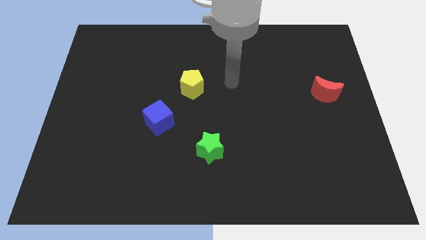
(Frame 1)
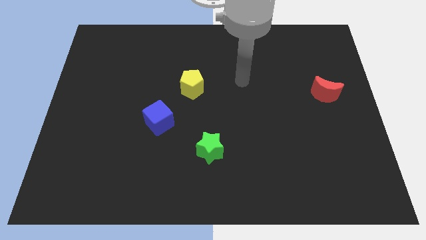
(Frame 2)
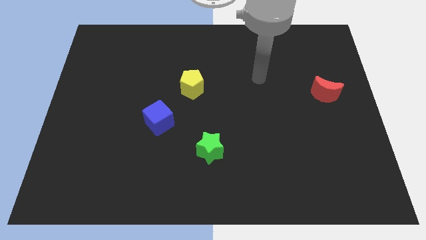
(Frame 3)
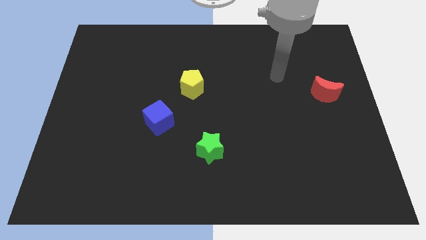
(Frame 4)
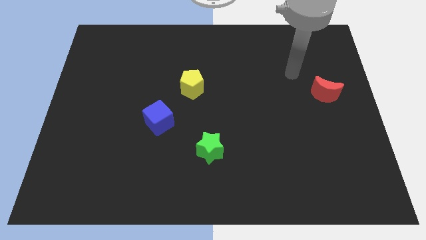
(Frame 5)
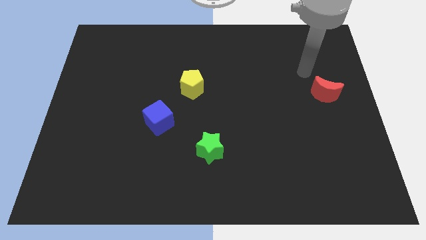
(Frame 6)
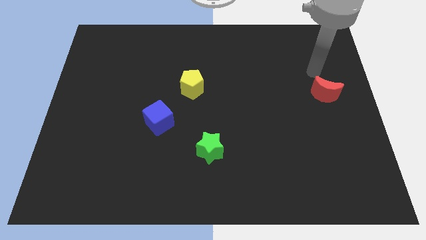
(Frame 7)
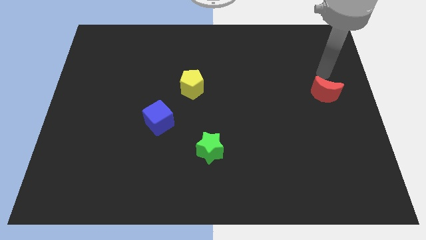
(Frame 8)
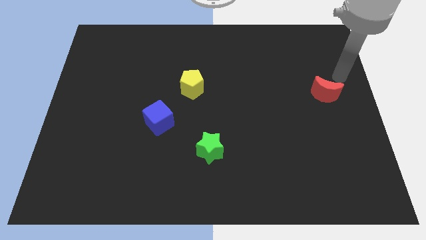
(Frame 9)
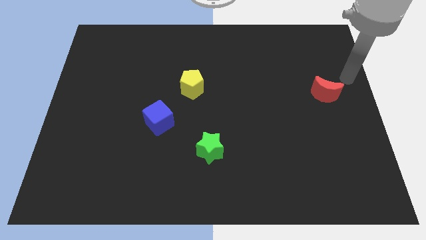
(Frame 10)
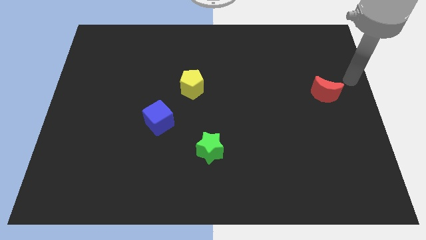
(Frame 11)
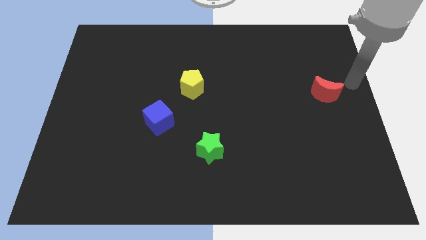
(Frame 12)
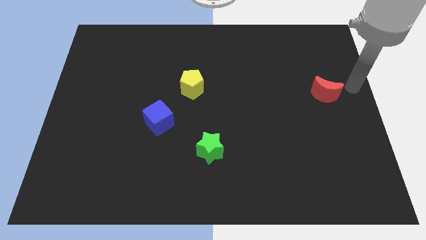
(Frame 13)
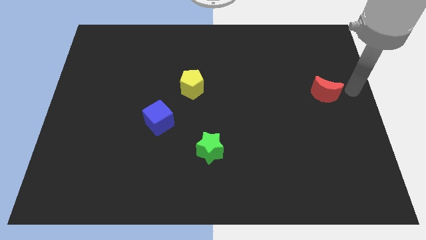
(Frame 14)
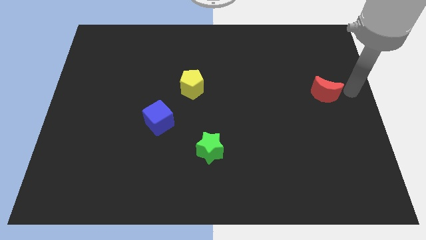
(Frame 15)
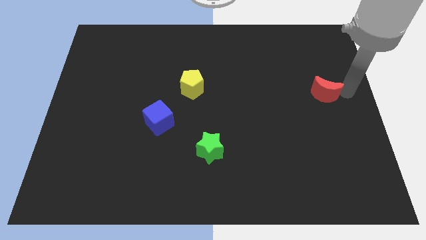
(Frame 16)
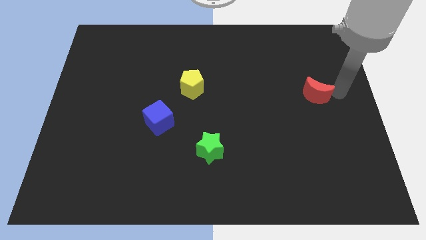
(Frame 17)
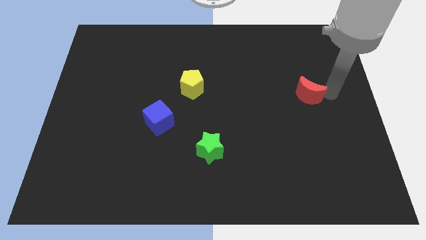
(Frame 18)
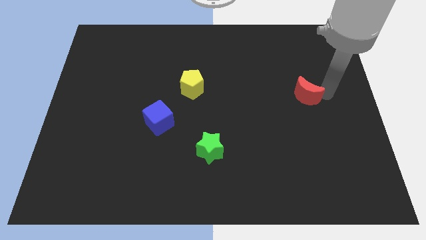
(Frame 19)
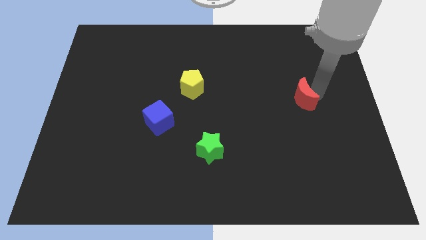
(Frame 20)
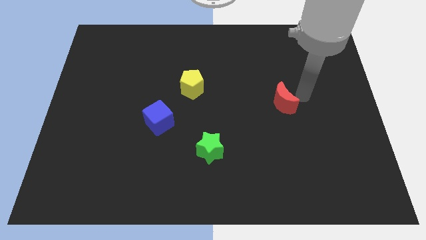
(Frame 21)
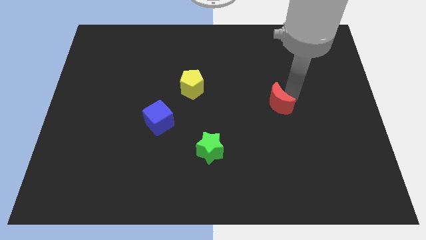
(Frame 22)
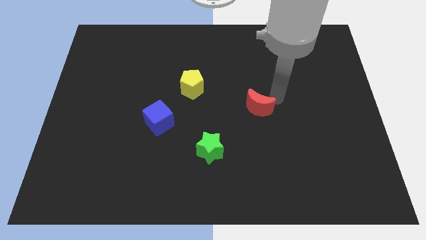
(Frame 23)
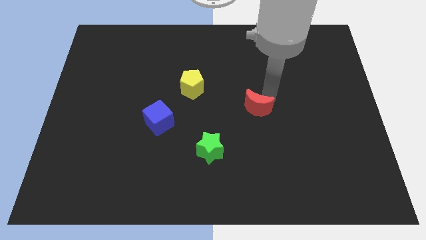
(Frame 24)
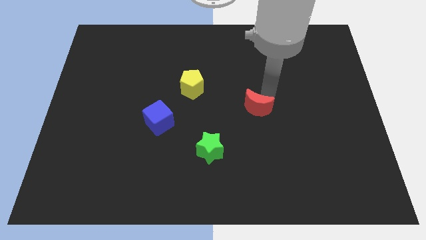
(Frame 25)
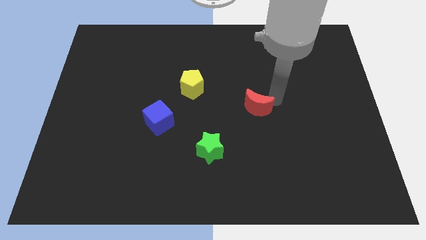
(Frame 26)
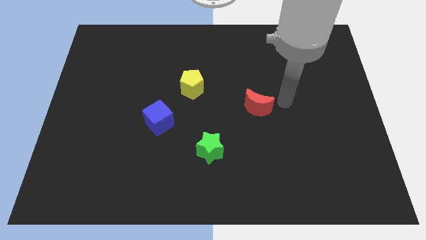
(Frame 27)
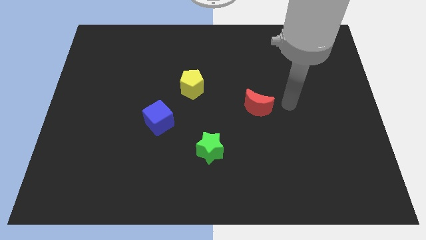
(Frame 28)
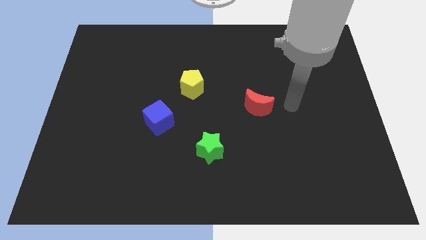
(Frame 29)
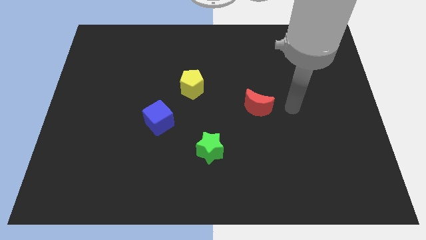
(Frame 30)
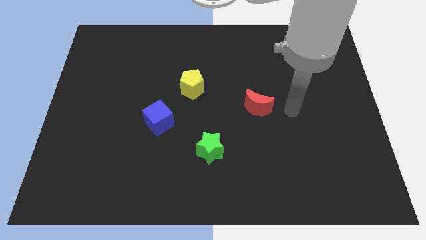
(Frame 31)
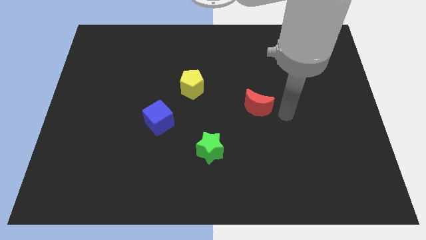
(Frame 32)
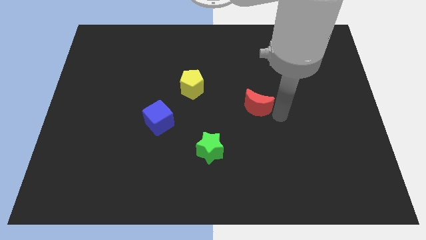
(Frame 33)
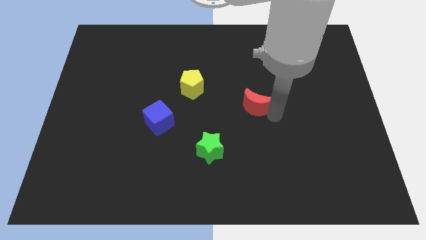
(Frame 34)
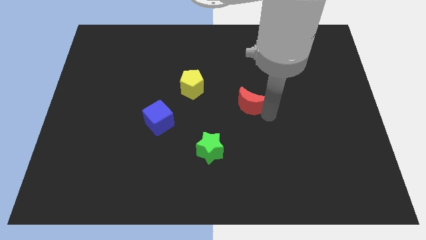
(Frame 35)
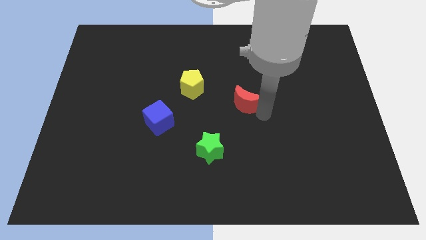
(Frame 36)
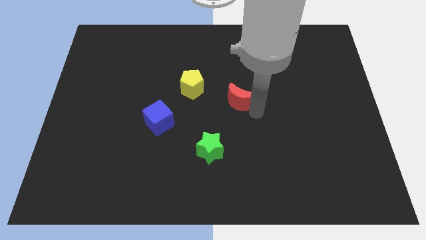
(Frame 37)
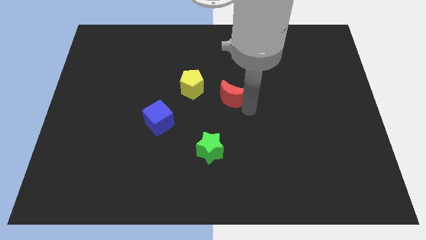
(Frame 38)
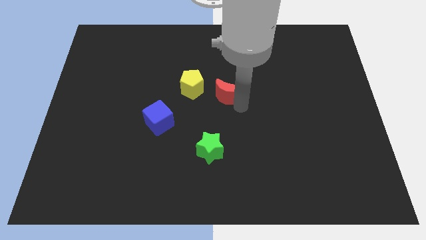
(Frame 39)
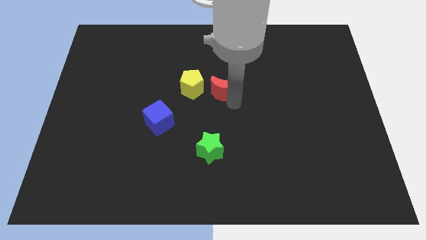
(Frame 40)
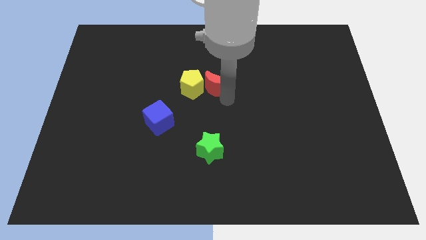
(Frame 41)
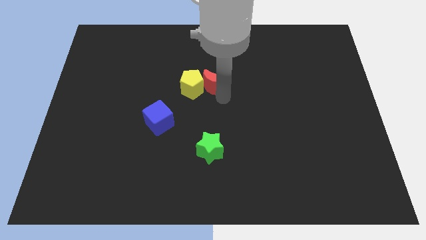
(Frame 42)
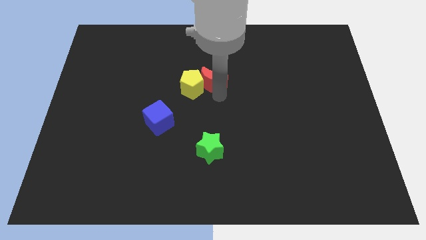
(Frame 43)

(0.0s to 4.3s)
slide the red moon next to the pentagon

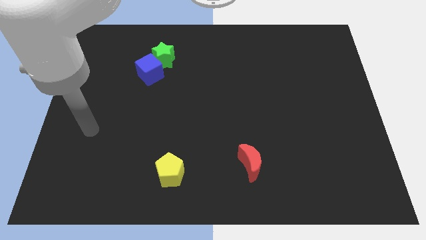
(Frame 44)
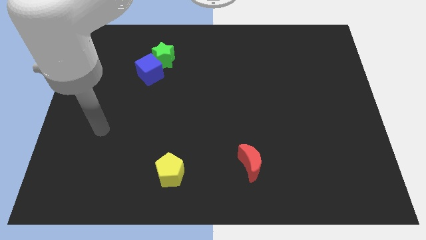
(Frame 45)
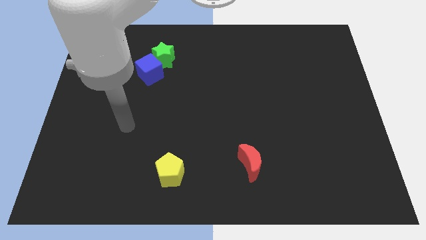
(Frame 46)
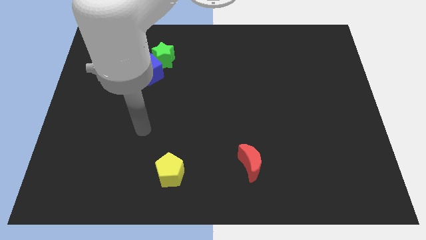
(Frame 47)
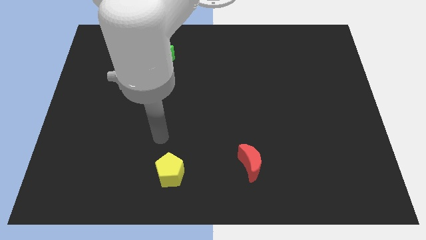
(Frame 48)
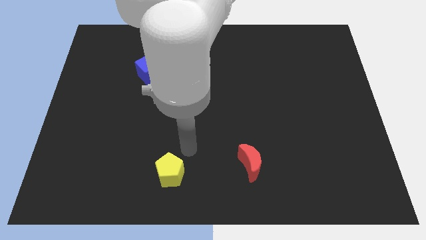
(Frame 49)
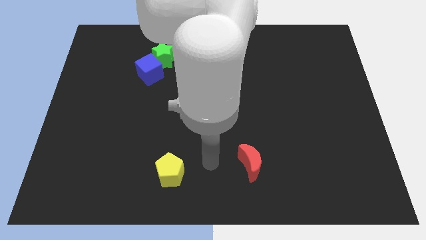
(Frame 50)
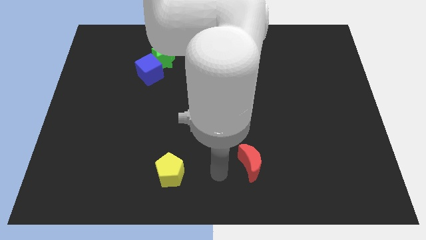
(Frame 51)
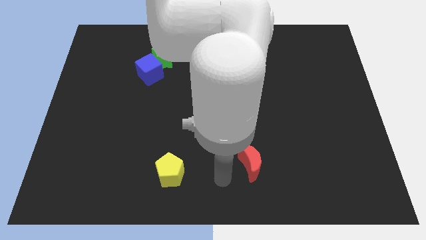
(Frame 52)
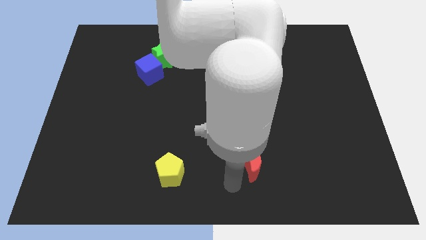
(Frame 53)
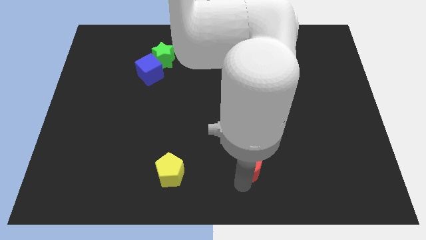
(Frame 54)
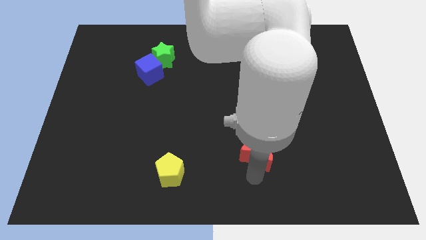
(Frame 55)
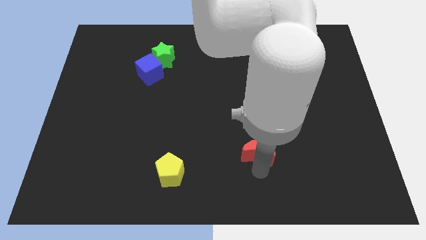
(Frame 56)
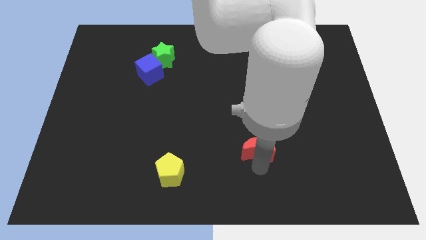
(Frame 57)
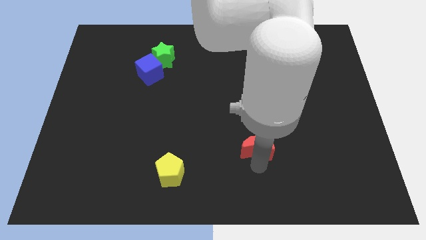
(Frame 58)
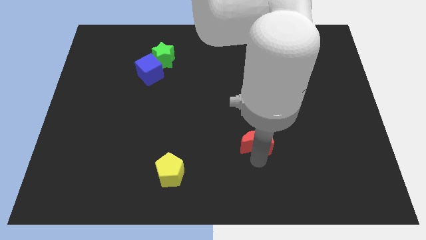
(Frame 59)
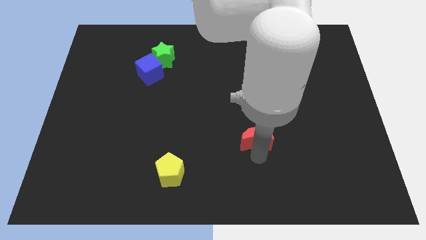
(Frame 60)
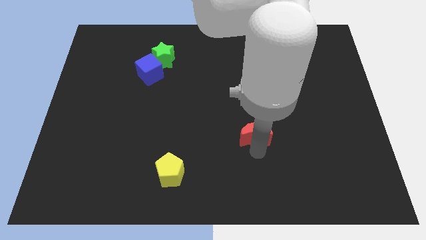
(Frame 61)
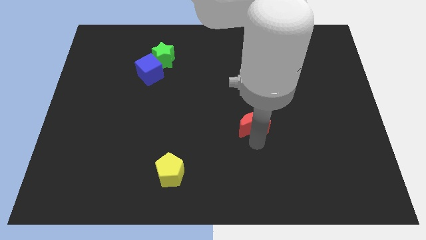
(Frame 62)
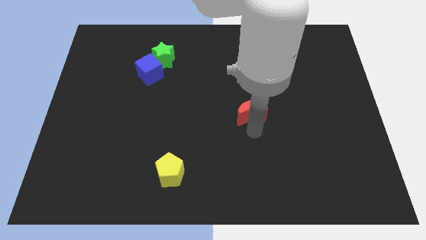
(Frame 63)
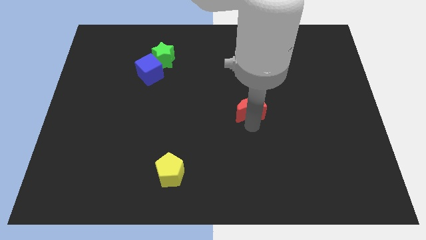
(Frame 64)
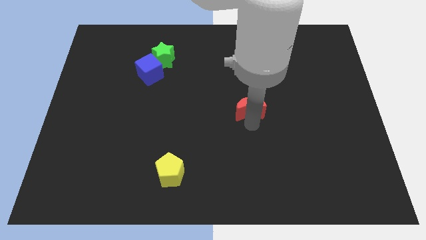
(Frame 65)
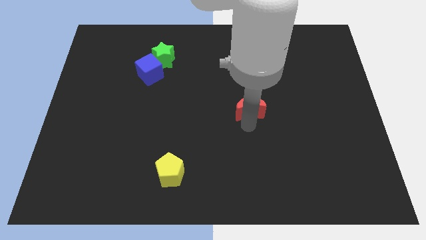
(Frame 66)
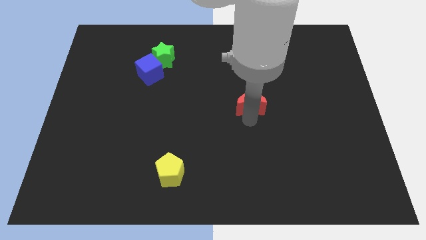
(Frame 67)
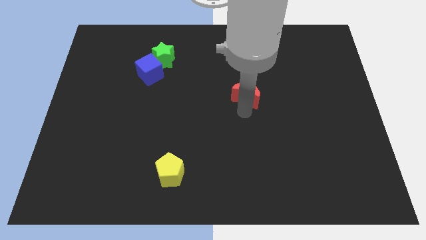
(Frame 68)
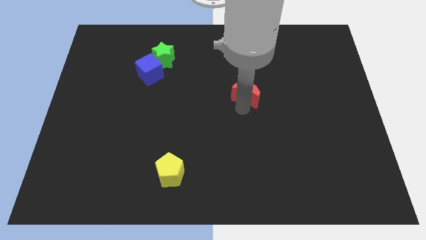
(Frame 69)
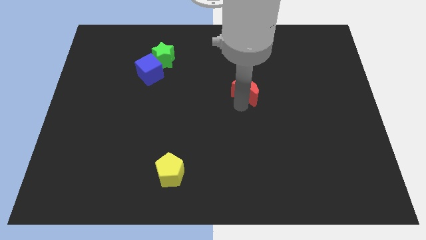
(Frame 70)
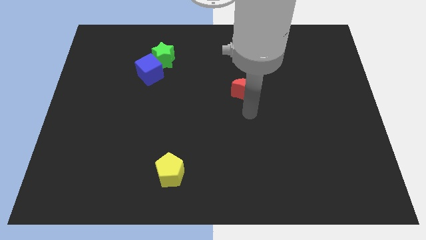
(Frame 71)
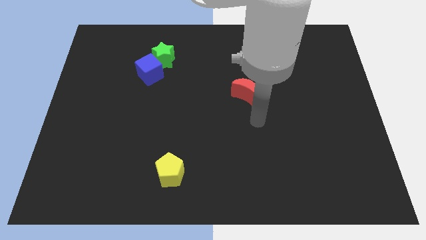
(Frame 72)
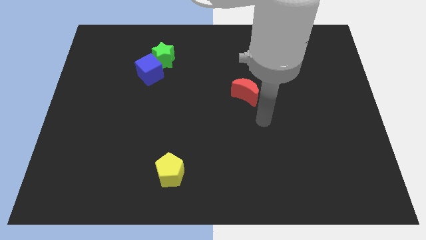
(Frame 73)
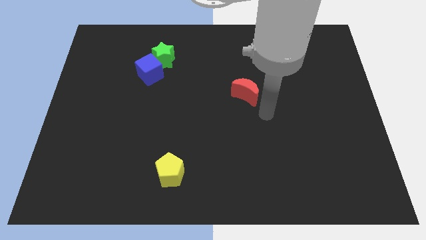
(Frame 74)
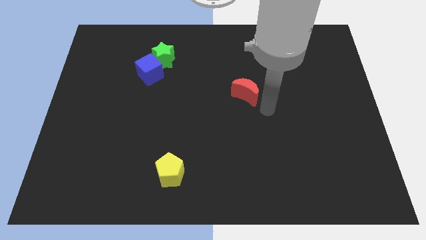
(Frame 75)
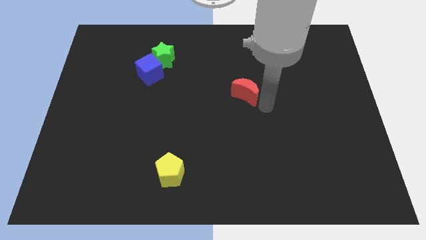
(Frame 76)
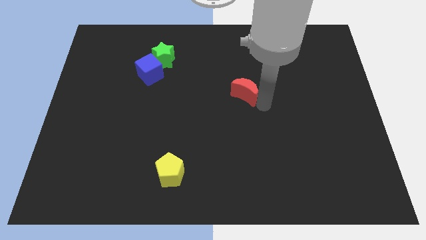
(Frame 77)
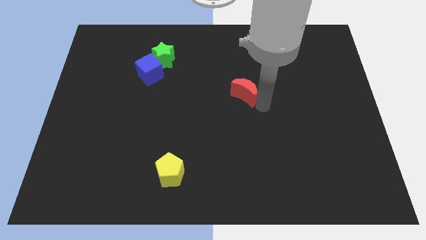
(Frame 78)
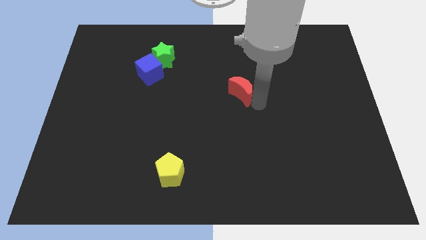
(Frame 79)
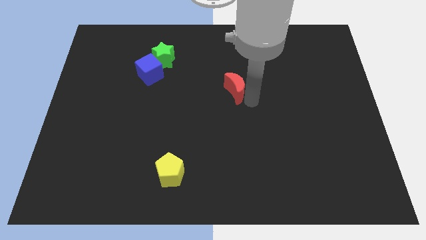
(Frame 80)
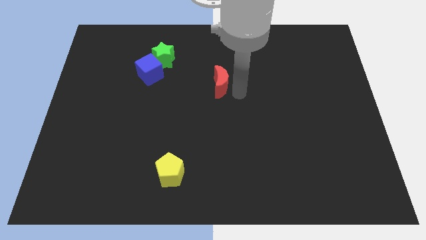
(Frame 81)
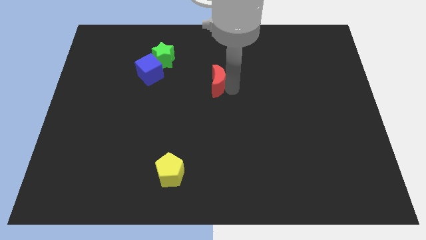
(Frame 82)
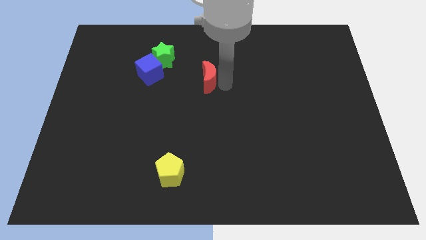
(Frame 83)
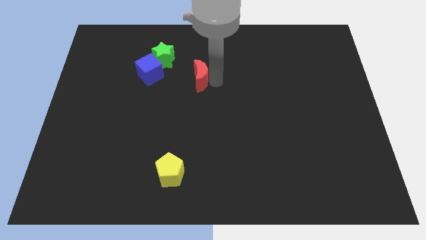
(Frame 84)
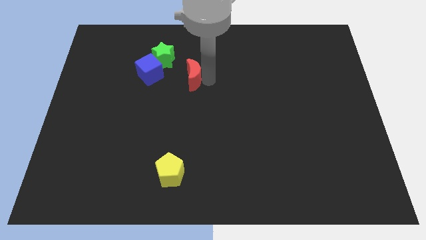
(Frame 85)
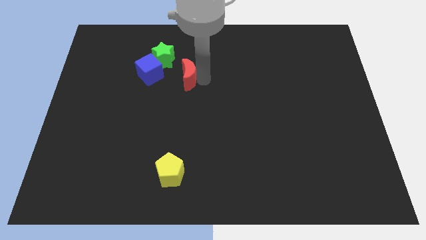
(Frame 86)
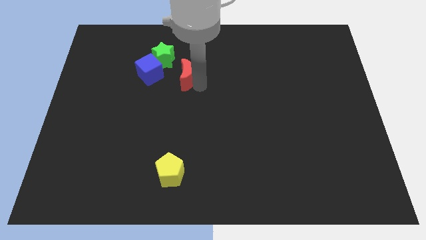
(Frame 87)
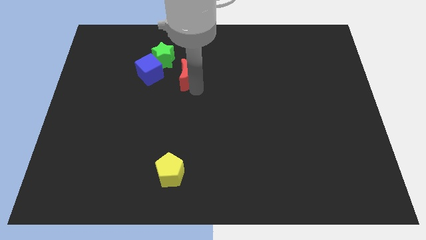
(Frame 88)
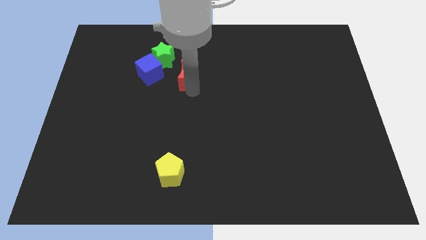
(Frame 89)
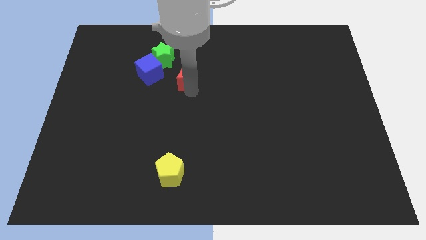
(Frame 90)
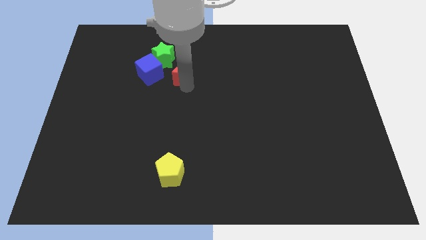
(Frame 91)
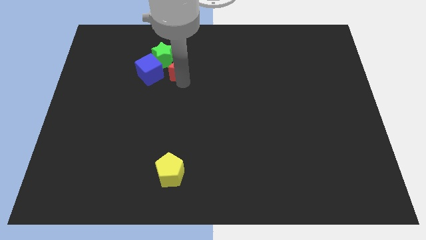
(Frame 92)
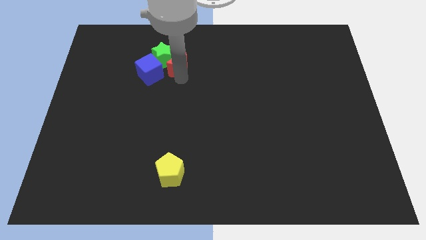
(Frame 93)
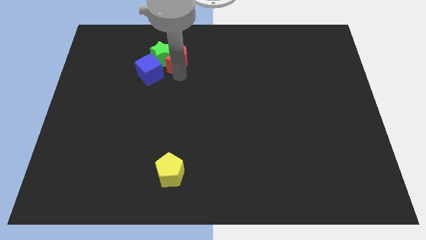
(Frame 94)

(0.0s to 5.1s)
put the red block to the star
